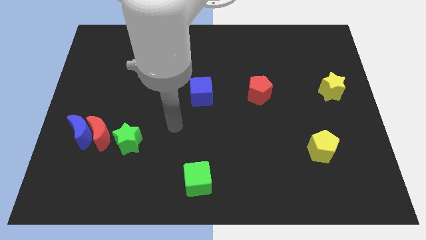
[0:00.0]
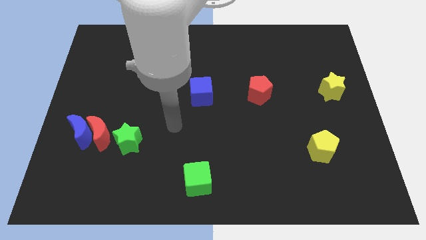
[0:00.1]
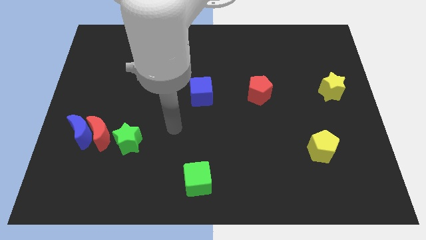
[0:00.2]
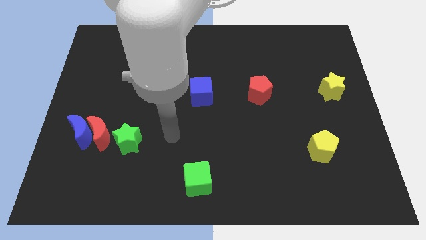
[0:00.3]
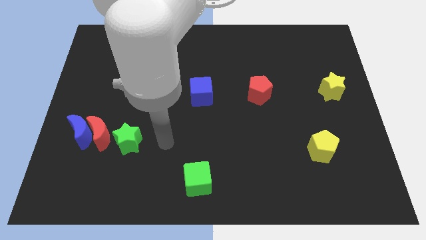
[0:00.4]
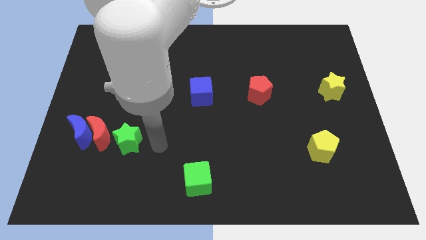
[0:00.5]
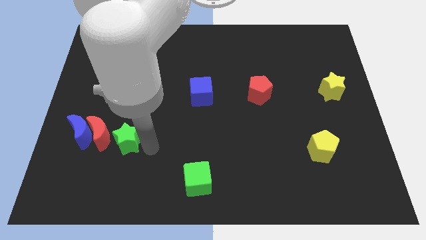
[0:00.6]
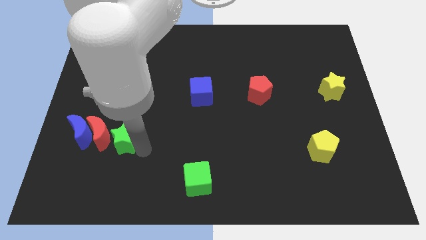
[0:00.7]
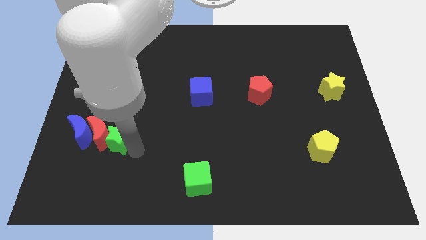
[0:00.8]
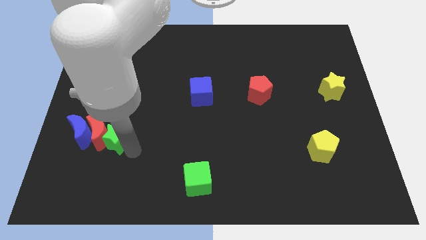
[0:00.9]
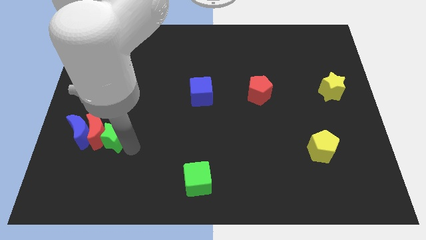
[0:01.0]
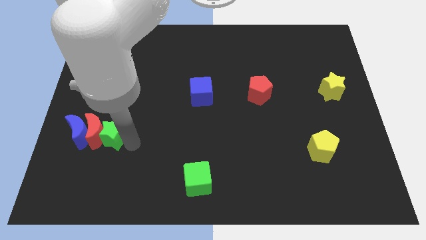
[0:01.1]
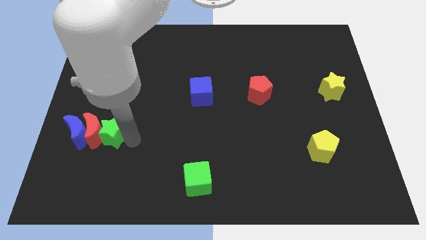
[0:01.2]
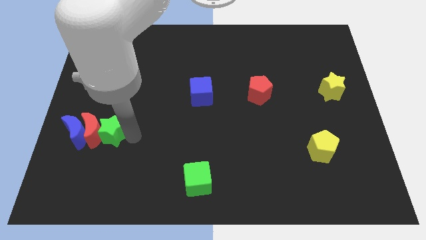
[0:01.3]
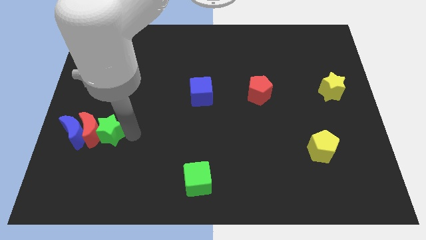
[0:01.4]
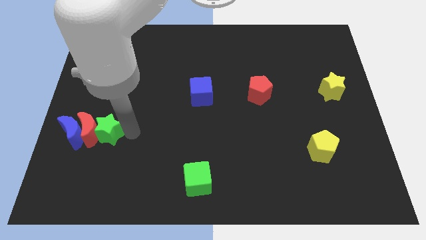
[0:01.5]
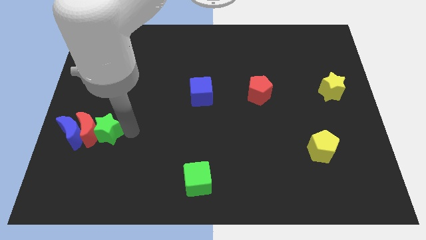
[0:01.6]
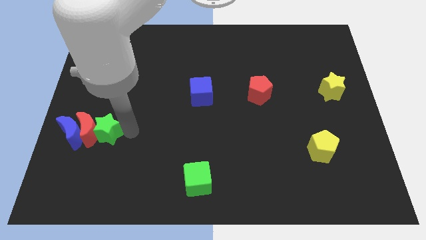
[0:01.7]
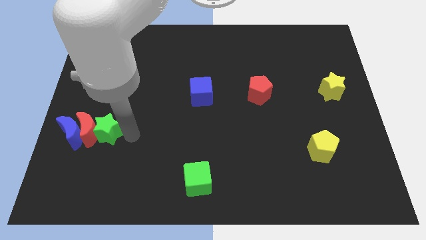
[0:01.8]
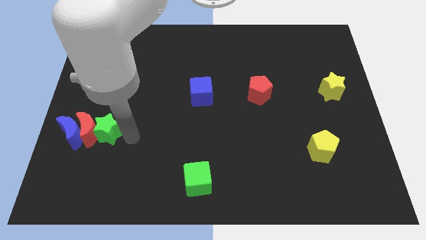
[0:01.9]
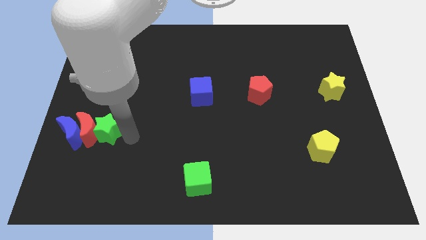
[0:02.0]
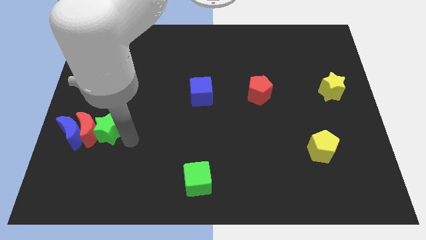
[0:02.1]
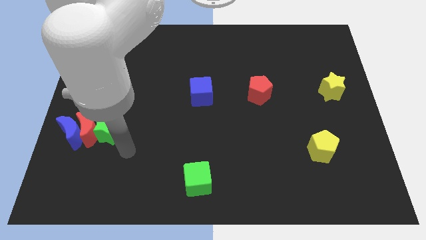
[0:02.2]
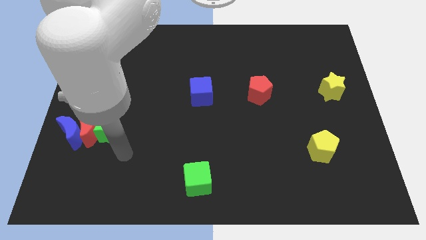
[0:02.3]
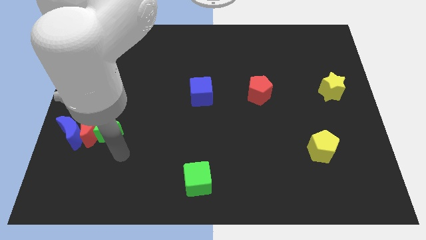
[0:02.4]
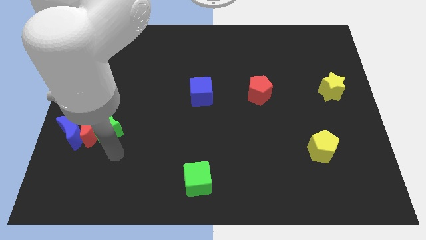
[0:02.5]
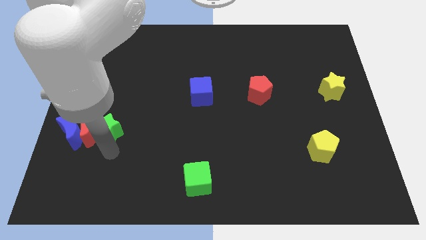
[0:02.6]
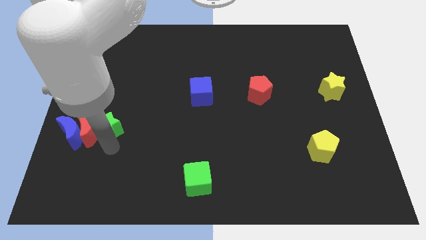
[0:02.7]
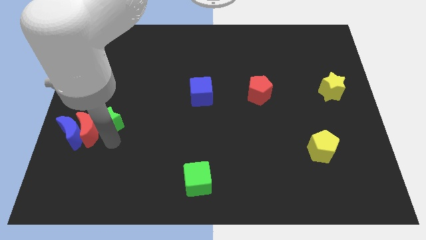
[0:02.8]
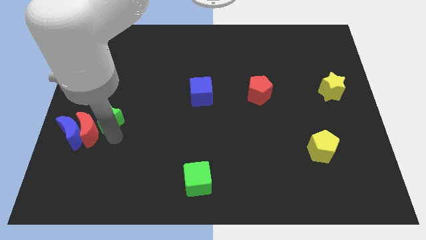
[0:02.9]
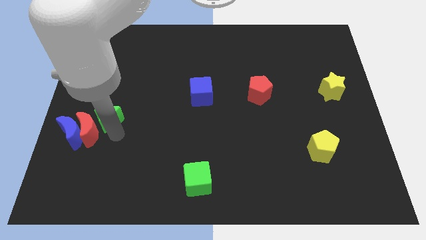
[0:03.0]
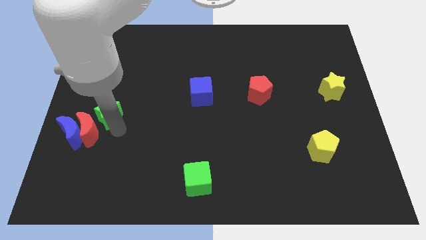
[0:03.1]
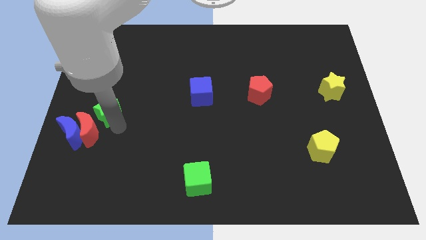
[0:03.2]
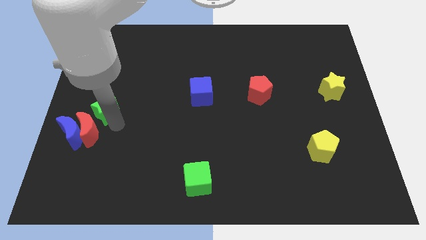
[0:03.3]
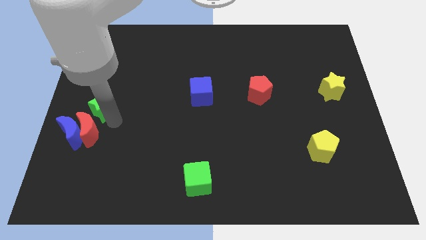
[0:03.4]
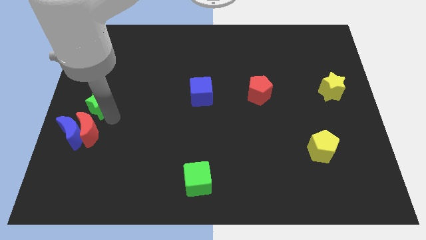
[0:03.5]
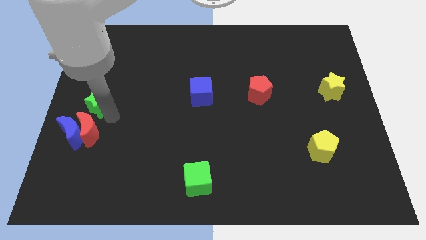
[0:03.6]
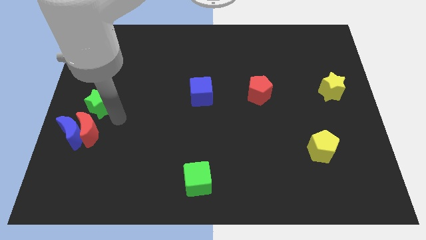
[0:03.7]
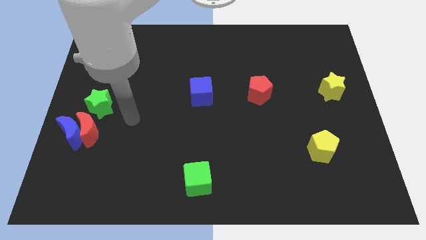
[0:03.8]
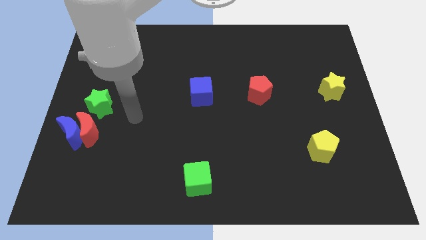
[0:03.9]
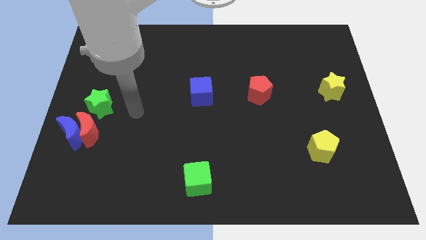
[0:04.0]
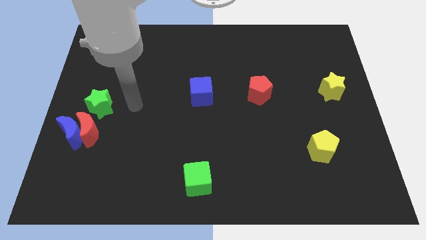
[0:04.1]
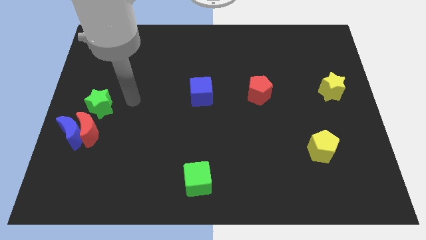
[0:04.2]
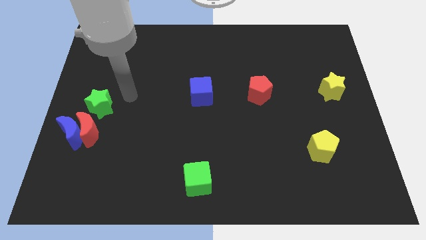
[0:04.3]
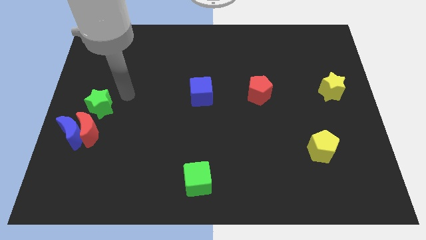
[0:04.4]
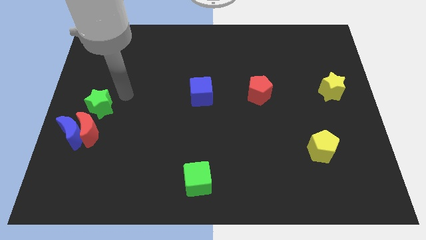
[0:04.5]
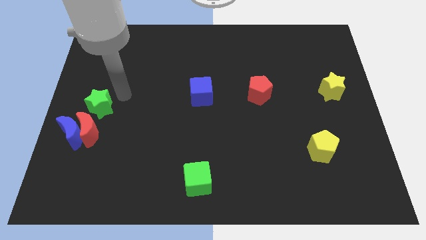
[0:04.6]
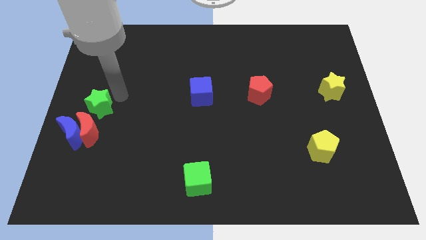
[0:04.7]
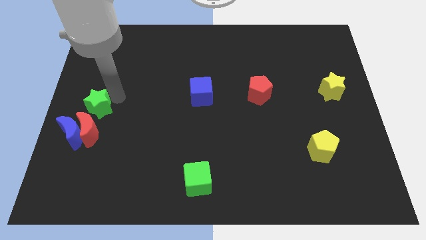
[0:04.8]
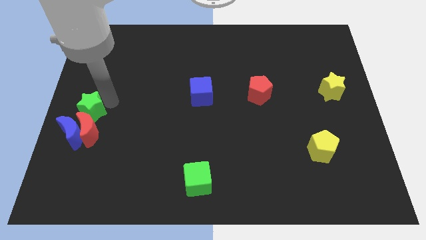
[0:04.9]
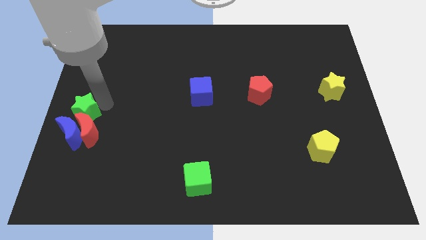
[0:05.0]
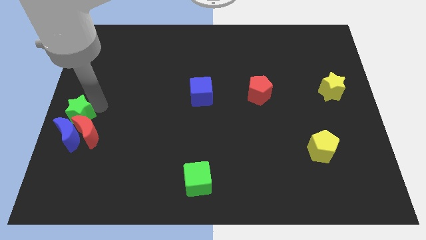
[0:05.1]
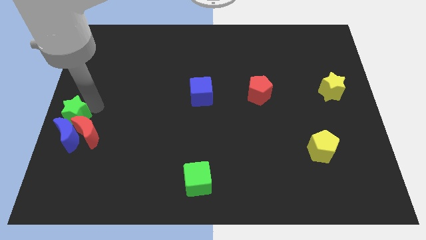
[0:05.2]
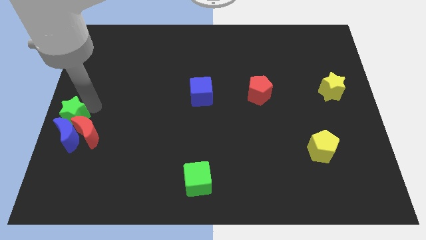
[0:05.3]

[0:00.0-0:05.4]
put the green star close to the blue moon

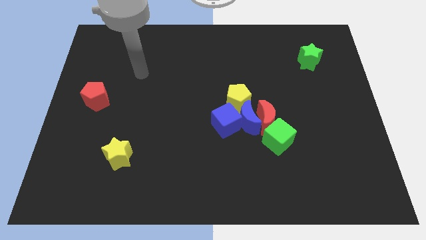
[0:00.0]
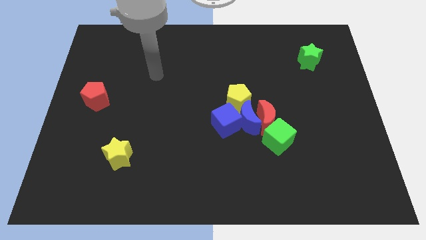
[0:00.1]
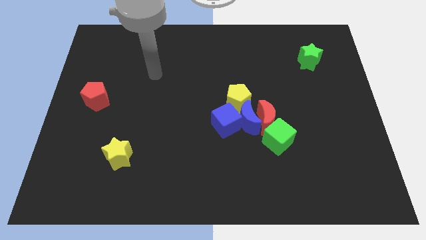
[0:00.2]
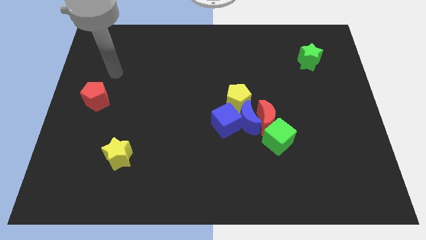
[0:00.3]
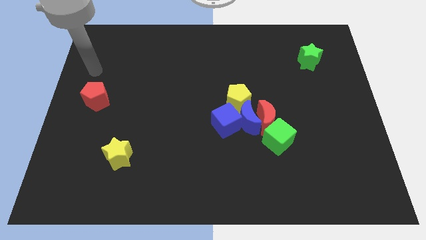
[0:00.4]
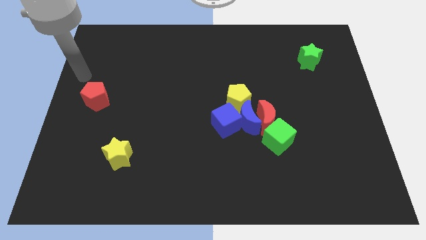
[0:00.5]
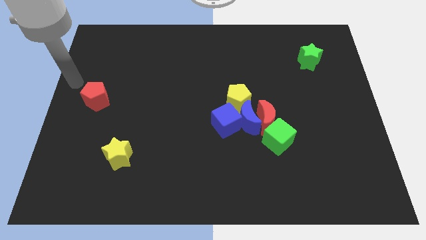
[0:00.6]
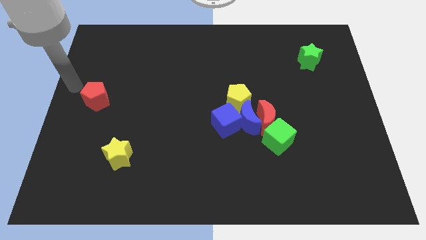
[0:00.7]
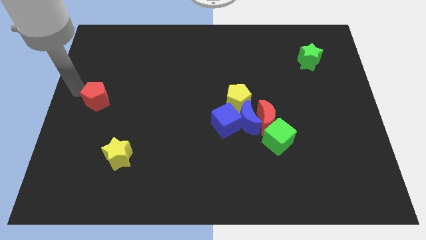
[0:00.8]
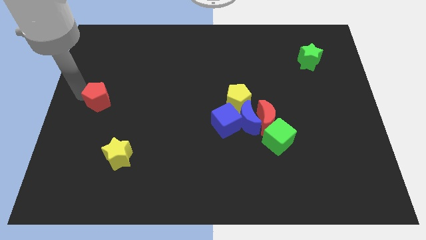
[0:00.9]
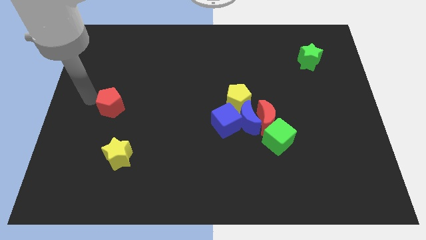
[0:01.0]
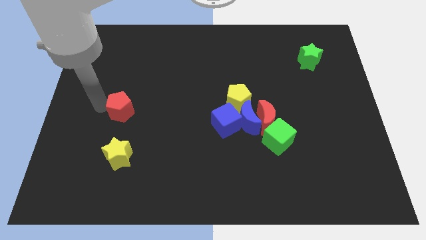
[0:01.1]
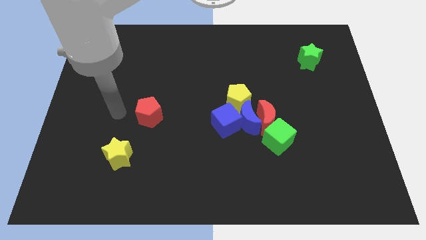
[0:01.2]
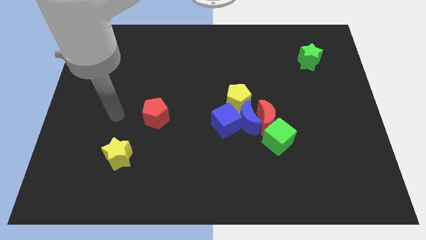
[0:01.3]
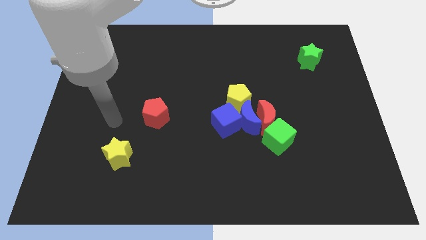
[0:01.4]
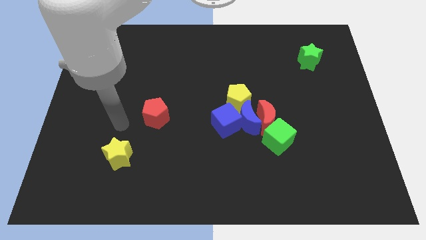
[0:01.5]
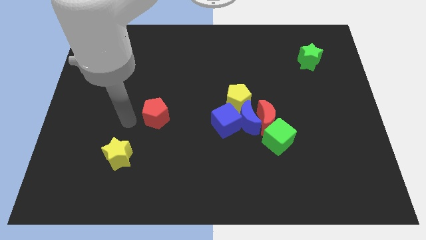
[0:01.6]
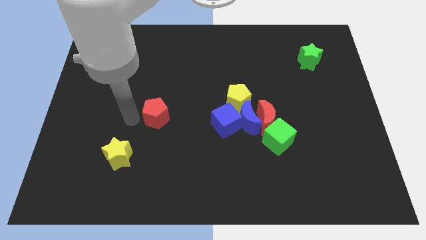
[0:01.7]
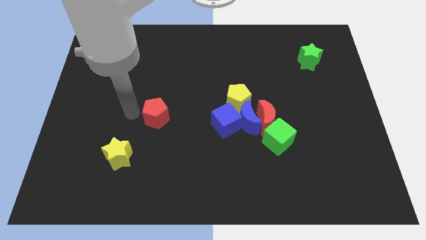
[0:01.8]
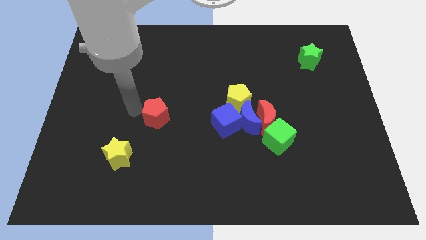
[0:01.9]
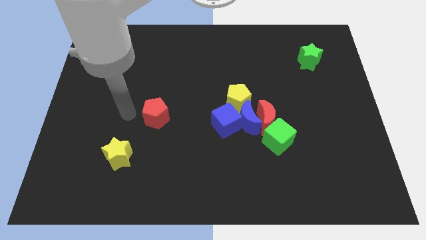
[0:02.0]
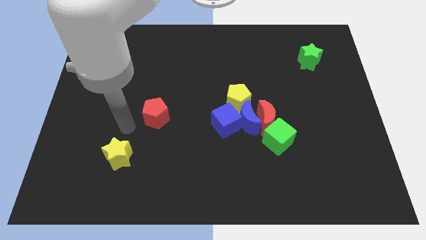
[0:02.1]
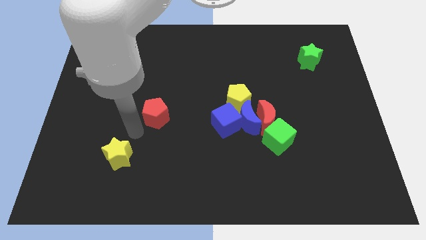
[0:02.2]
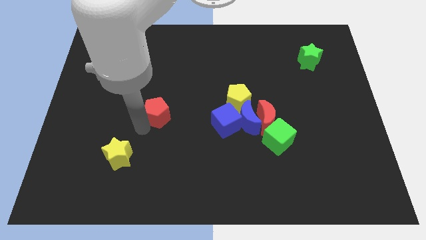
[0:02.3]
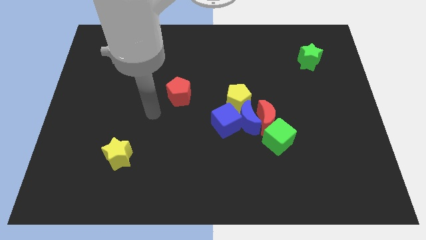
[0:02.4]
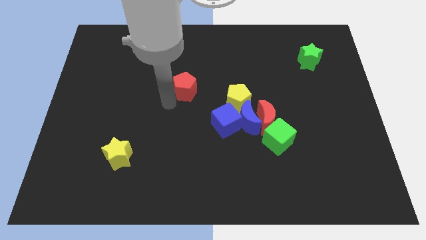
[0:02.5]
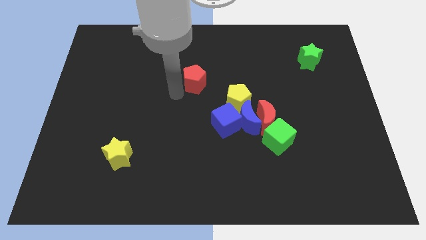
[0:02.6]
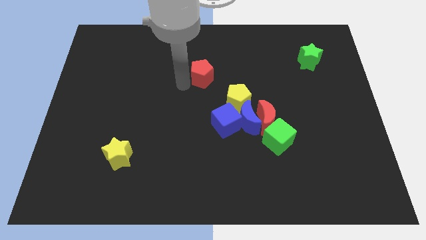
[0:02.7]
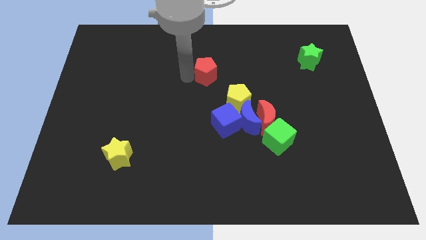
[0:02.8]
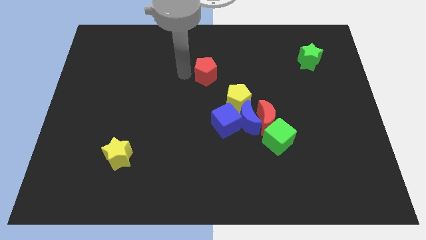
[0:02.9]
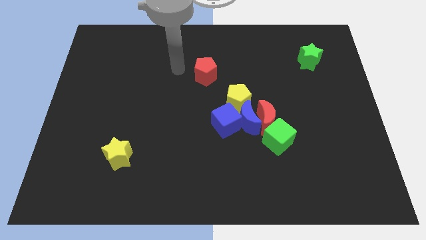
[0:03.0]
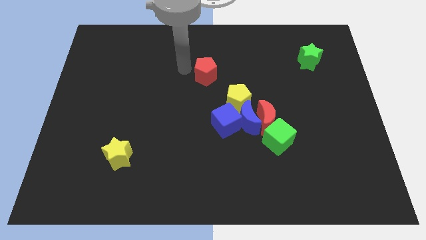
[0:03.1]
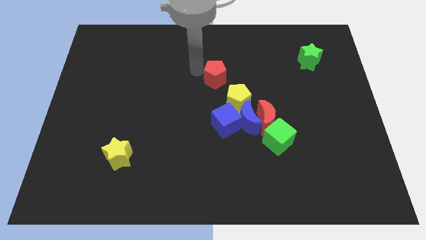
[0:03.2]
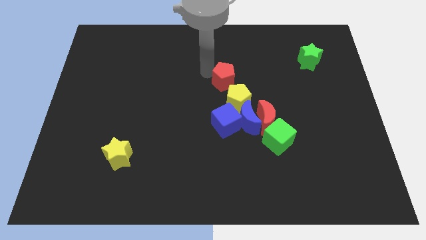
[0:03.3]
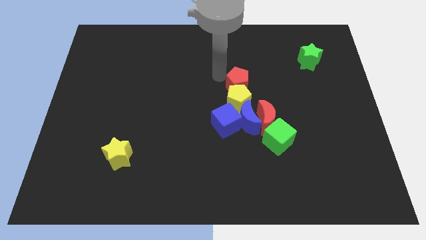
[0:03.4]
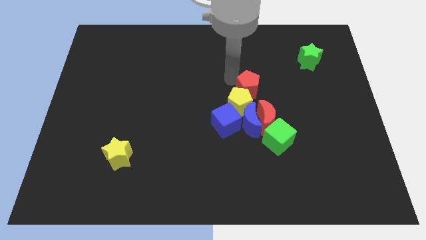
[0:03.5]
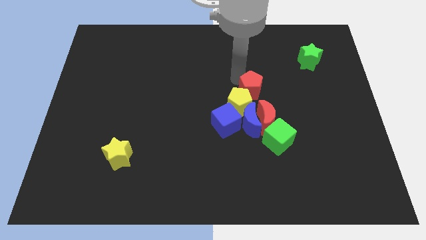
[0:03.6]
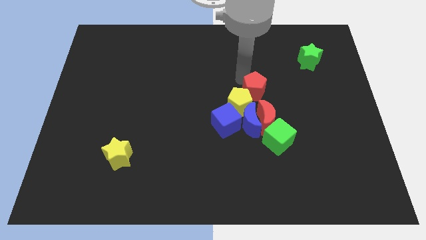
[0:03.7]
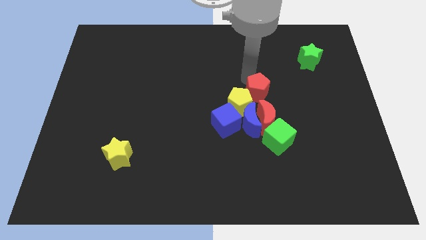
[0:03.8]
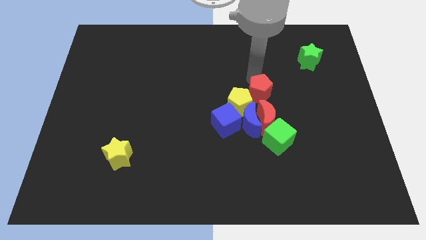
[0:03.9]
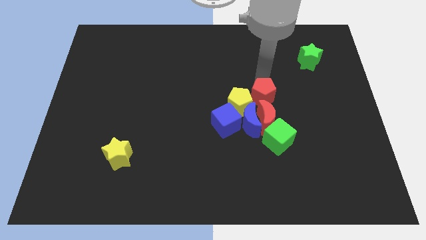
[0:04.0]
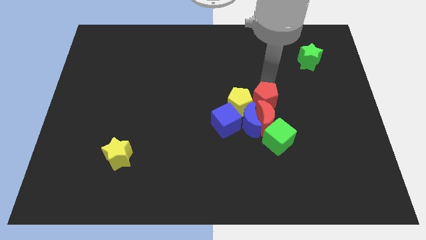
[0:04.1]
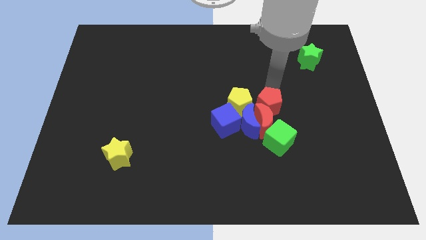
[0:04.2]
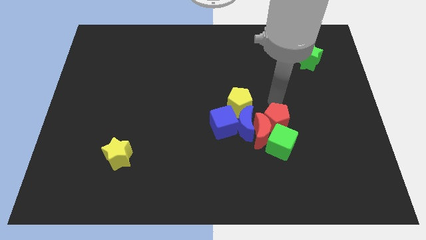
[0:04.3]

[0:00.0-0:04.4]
put the red pentagon next to the red moon
